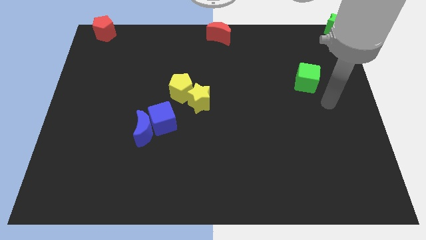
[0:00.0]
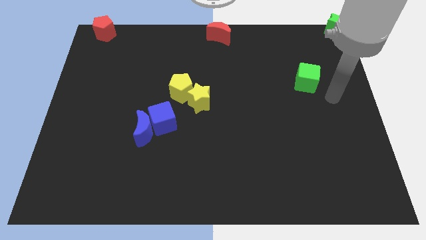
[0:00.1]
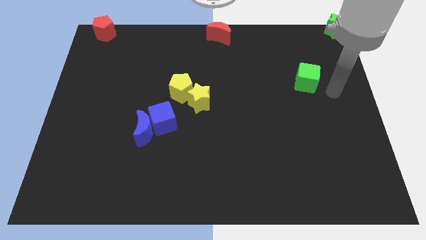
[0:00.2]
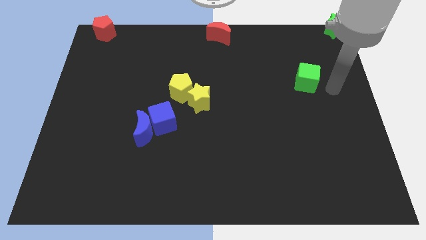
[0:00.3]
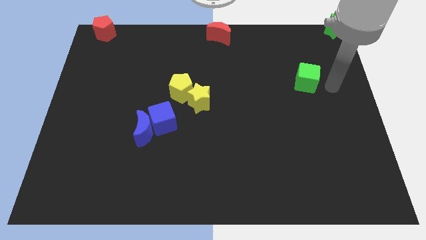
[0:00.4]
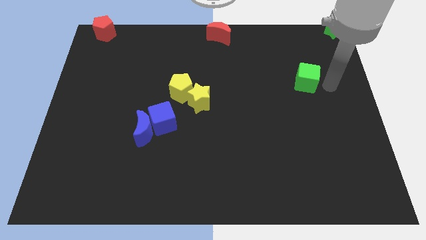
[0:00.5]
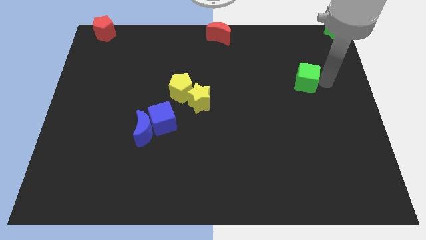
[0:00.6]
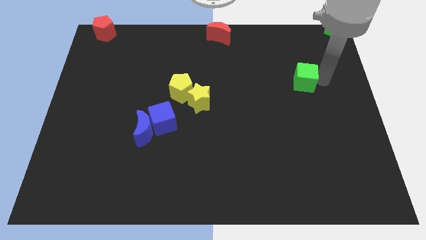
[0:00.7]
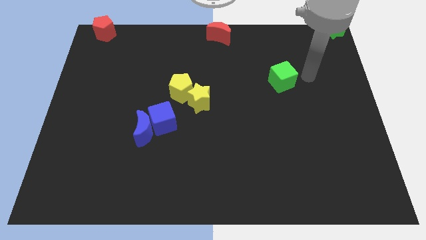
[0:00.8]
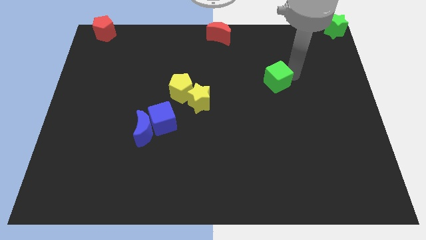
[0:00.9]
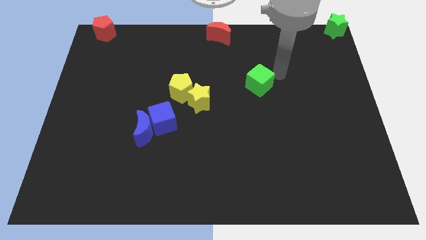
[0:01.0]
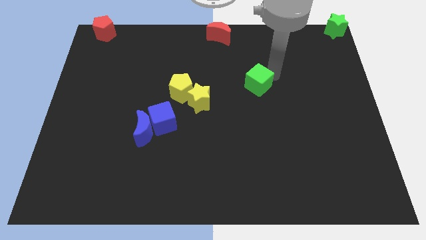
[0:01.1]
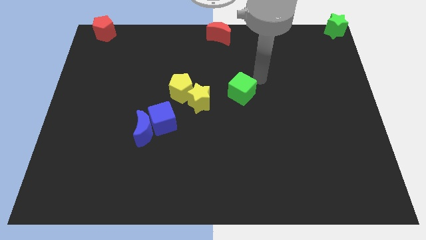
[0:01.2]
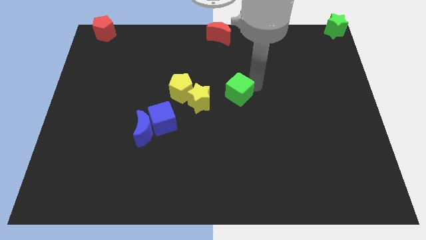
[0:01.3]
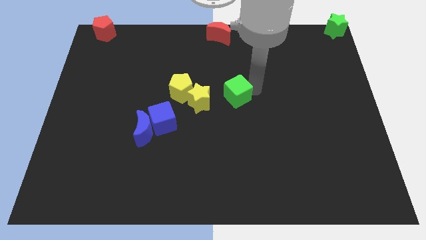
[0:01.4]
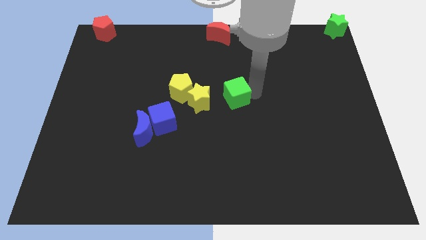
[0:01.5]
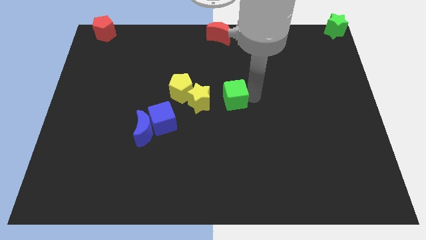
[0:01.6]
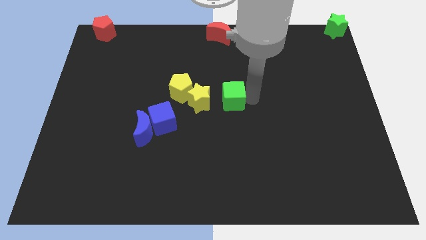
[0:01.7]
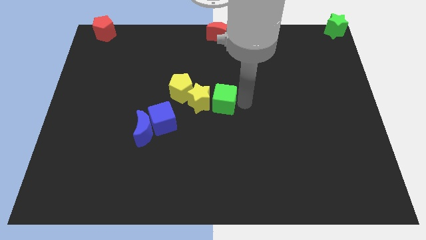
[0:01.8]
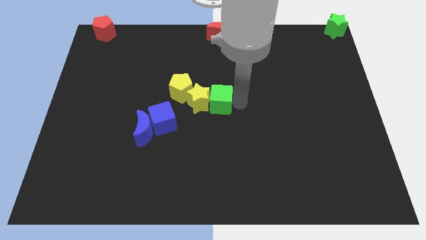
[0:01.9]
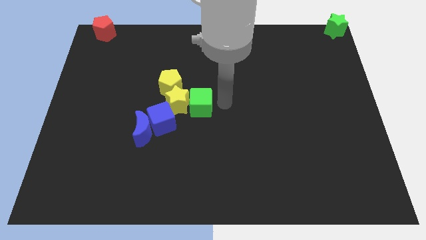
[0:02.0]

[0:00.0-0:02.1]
push green cube to the center

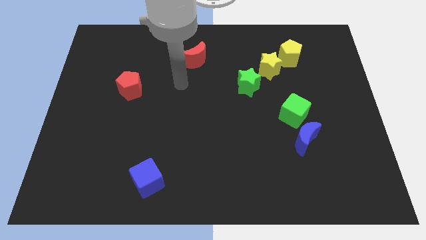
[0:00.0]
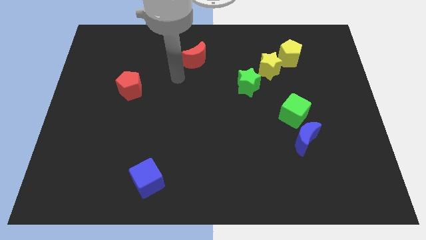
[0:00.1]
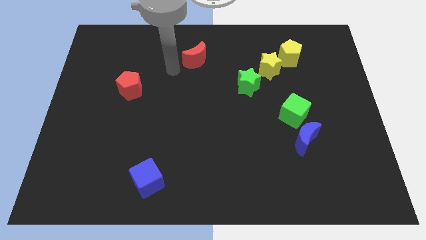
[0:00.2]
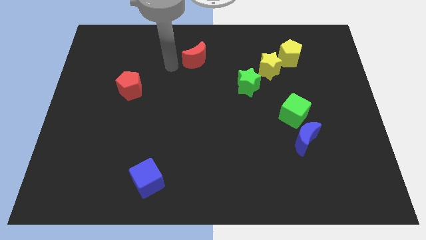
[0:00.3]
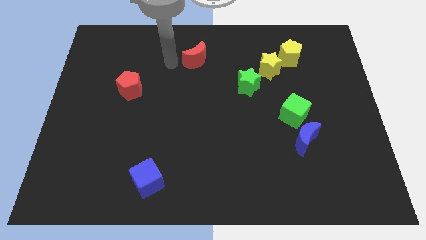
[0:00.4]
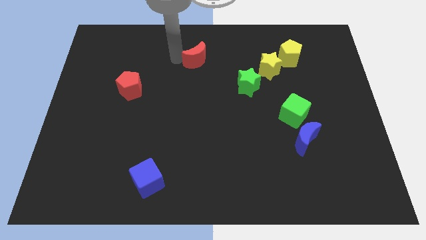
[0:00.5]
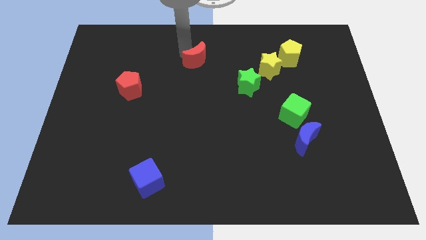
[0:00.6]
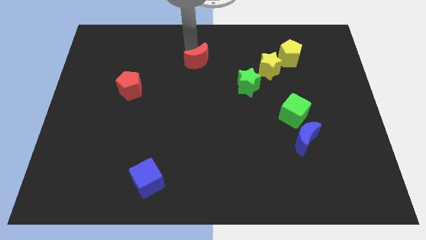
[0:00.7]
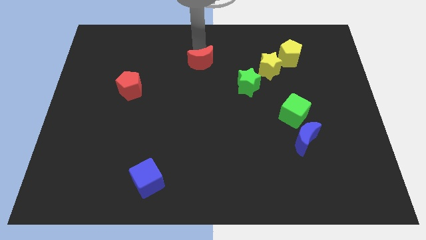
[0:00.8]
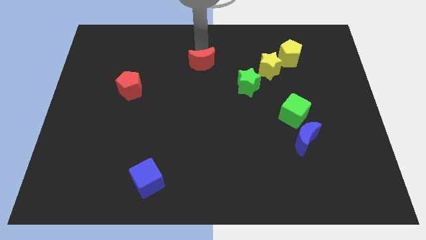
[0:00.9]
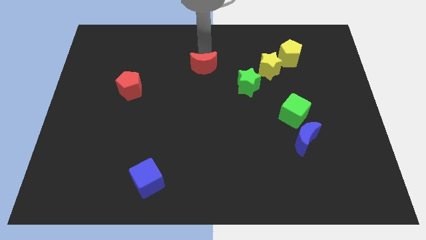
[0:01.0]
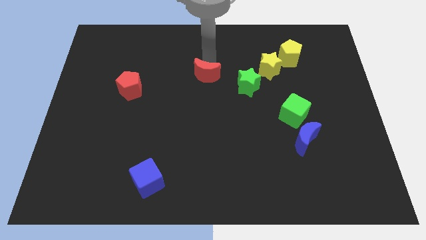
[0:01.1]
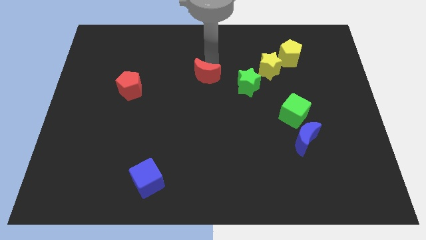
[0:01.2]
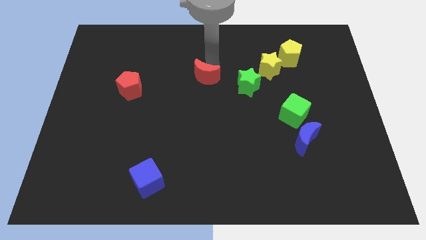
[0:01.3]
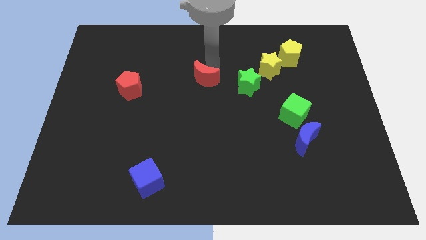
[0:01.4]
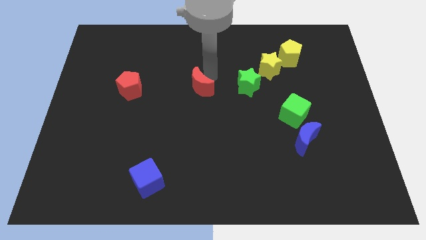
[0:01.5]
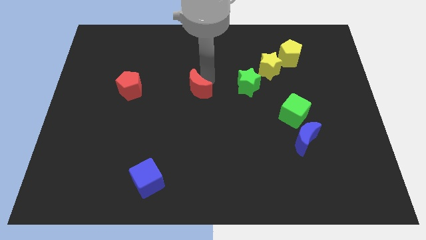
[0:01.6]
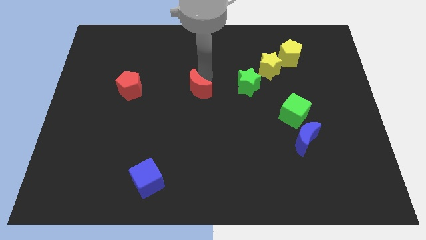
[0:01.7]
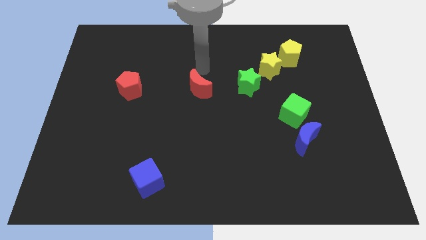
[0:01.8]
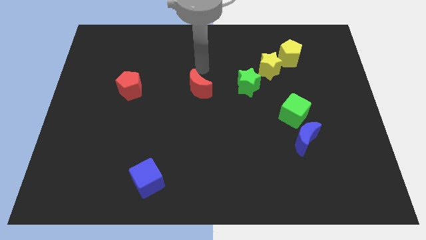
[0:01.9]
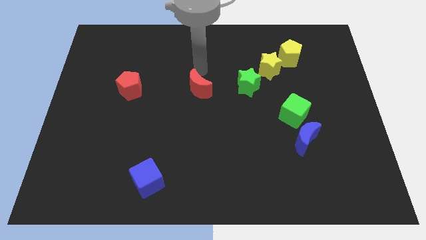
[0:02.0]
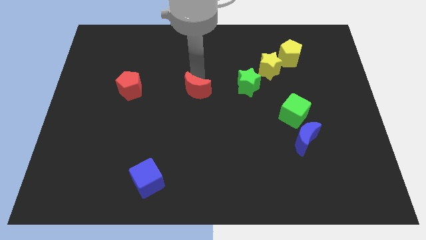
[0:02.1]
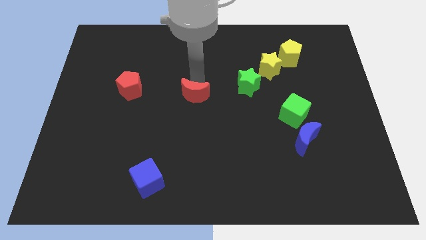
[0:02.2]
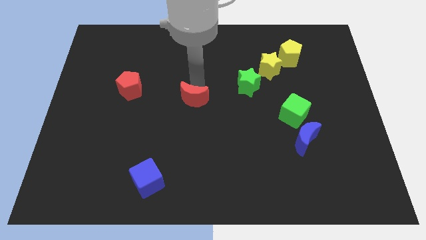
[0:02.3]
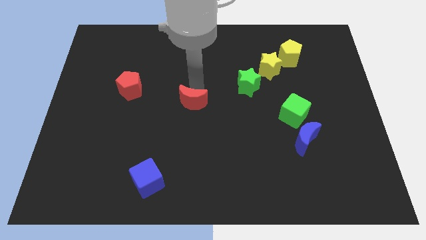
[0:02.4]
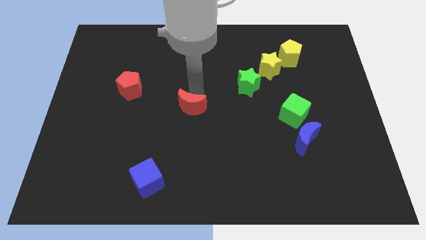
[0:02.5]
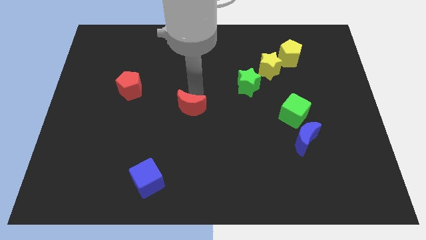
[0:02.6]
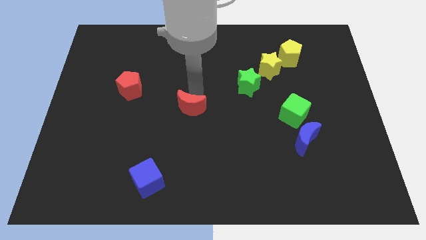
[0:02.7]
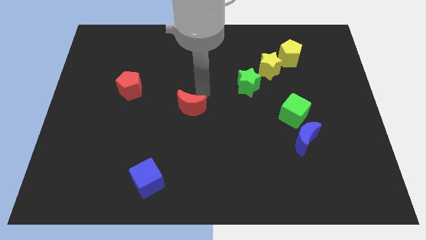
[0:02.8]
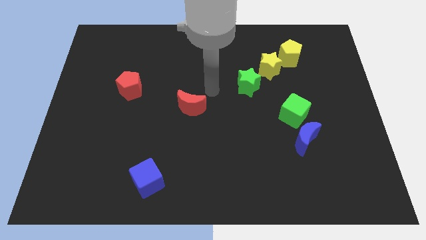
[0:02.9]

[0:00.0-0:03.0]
push the red crescent diagonal to the right of the red pentagon

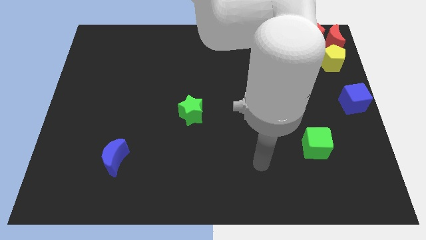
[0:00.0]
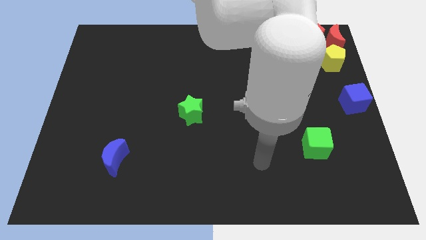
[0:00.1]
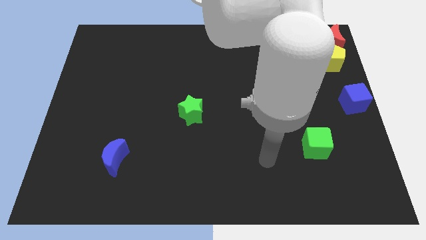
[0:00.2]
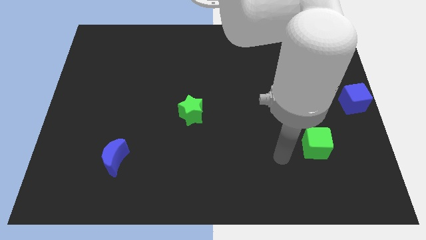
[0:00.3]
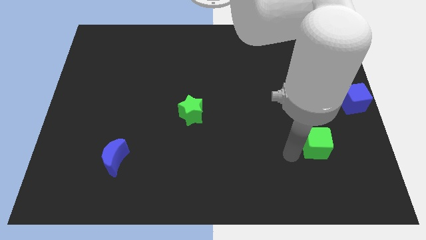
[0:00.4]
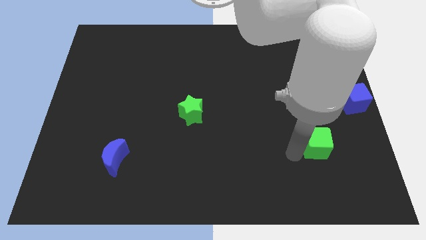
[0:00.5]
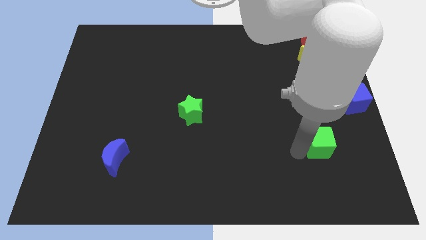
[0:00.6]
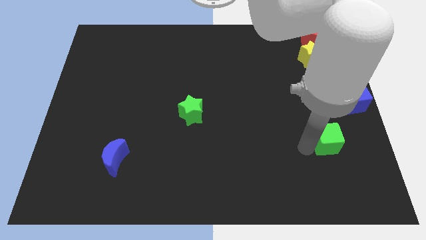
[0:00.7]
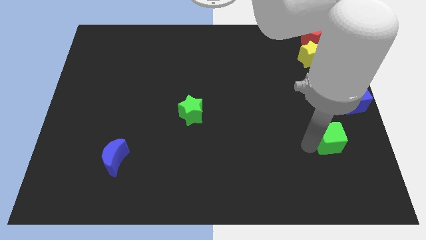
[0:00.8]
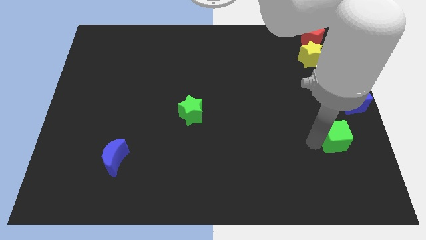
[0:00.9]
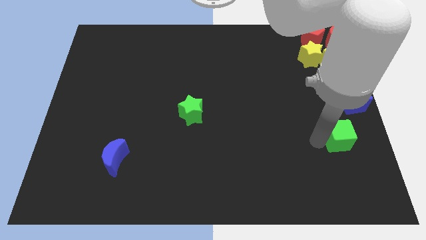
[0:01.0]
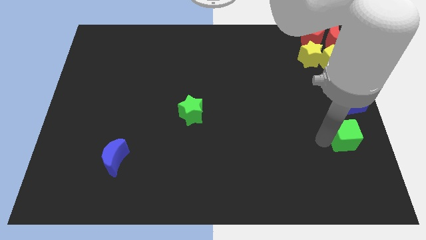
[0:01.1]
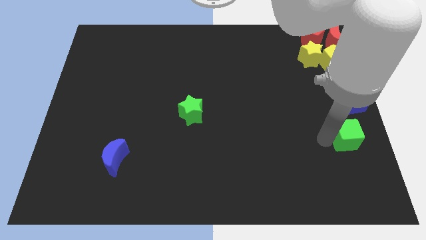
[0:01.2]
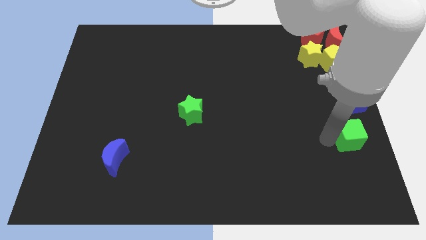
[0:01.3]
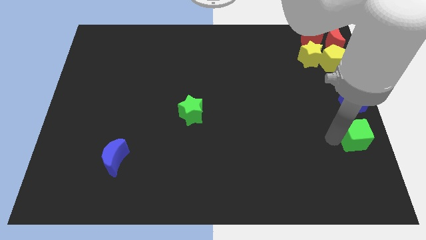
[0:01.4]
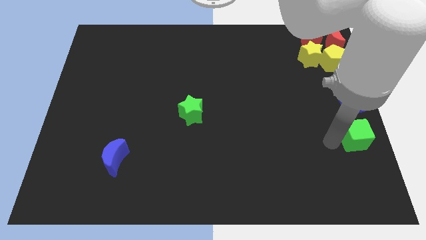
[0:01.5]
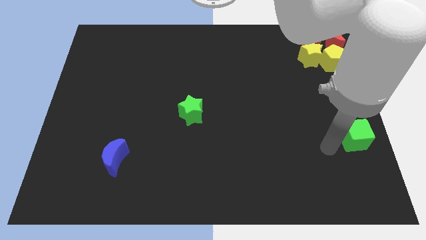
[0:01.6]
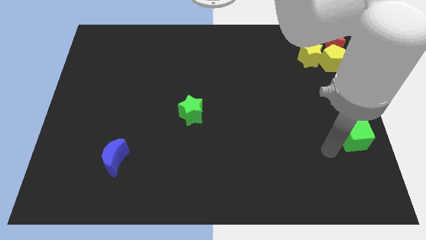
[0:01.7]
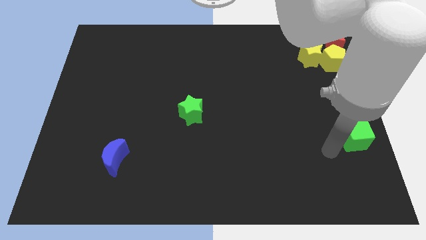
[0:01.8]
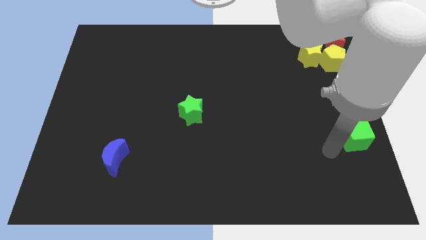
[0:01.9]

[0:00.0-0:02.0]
move the green cube to the right of the board

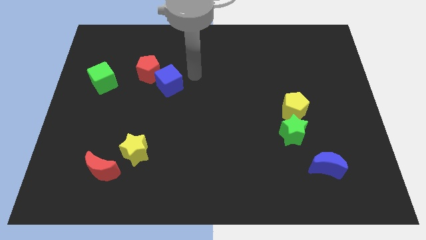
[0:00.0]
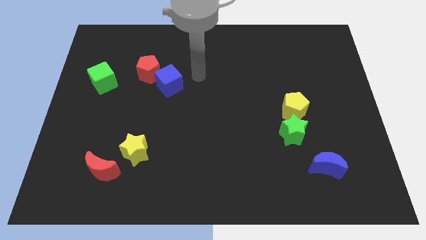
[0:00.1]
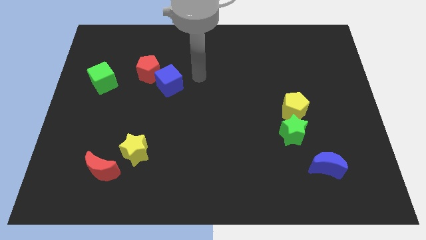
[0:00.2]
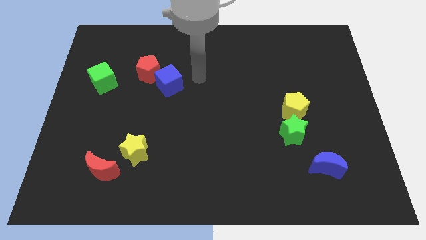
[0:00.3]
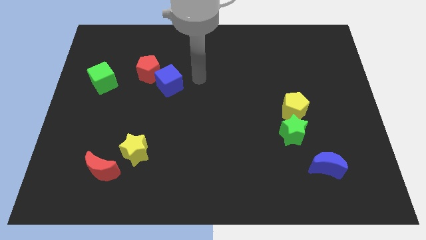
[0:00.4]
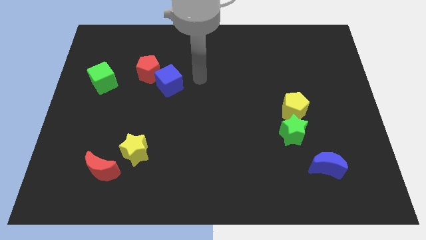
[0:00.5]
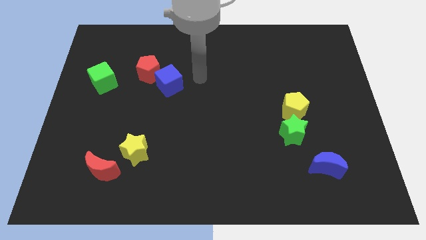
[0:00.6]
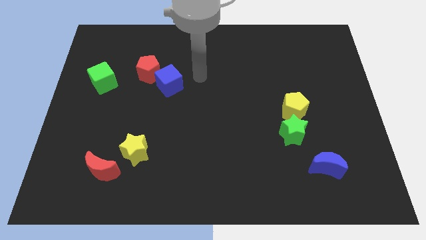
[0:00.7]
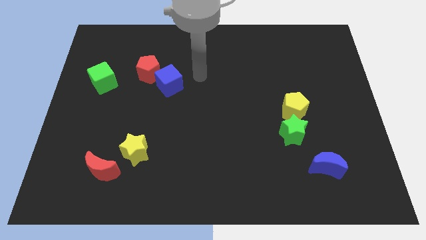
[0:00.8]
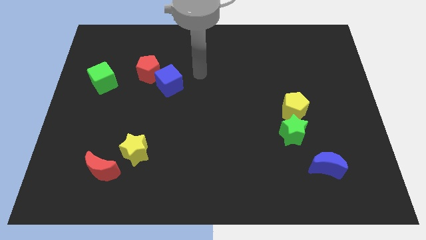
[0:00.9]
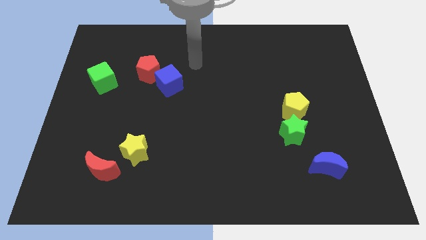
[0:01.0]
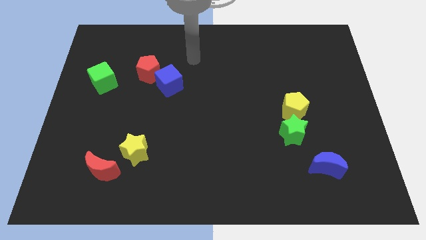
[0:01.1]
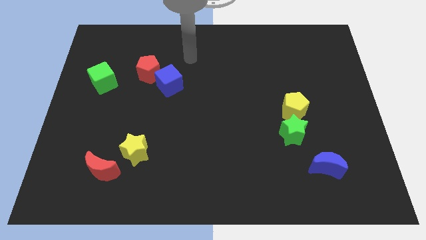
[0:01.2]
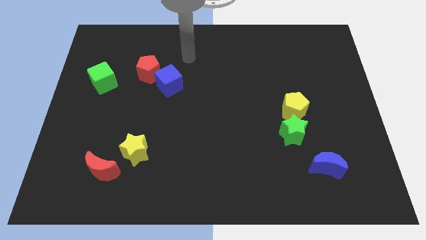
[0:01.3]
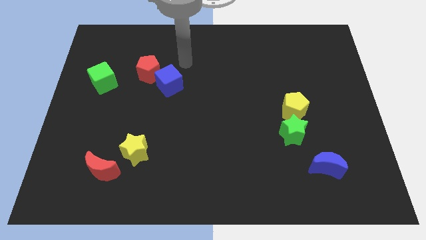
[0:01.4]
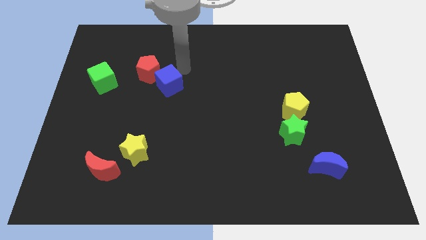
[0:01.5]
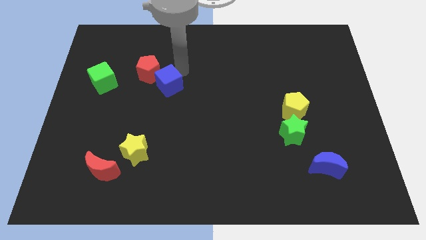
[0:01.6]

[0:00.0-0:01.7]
touch the top of the blue cube

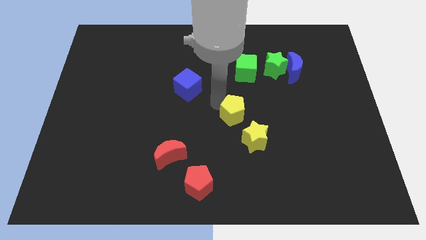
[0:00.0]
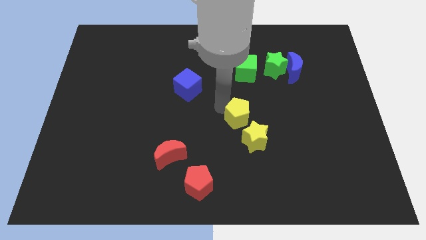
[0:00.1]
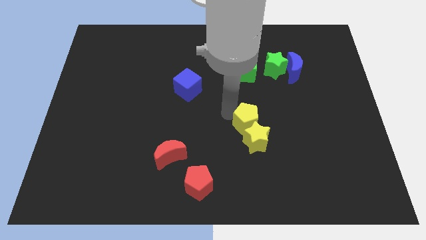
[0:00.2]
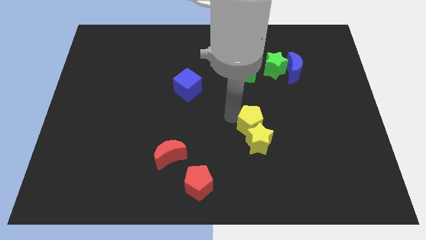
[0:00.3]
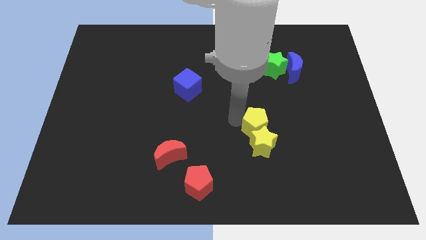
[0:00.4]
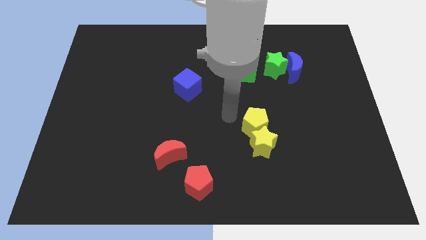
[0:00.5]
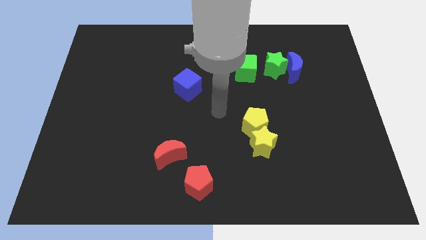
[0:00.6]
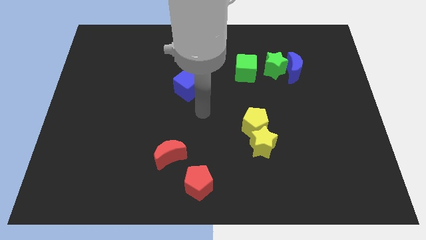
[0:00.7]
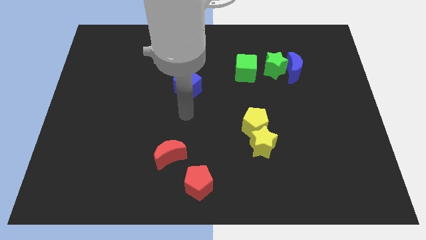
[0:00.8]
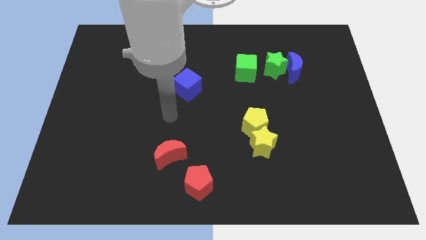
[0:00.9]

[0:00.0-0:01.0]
put yellow pentagon to the top left of the yellow star
